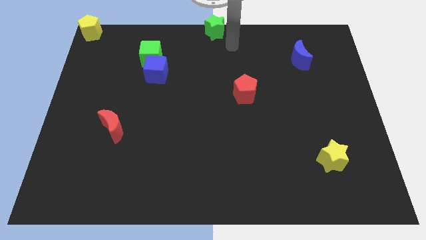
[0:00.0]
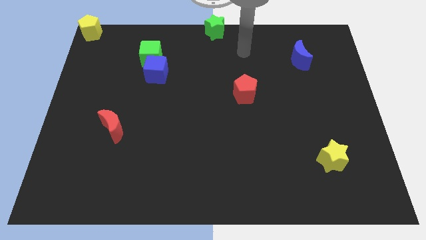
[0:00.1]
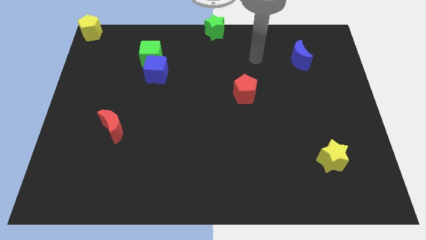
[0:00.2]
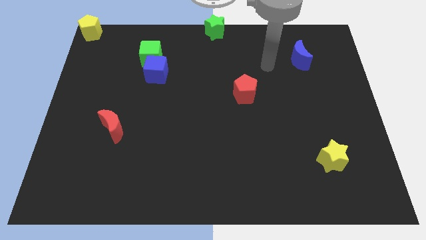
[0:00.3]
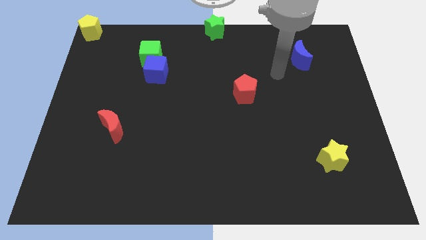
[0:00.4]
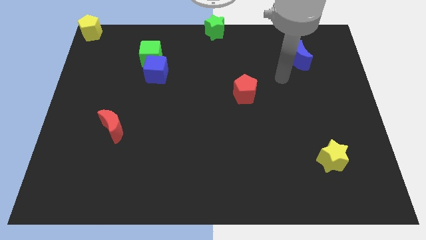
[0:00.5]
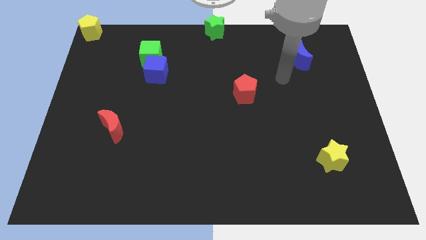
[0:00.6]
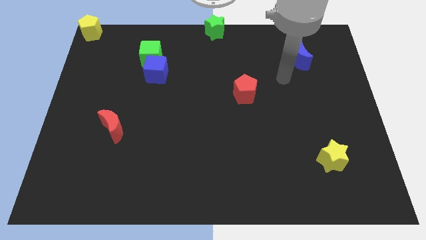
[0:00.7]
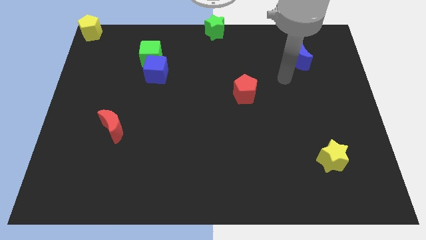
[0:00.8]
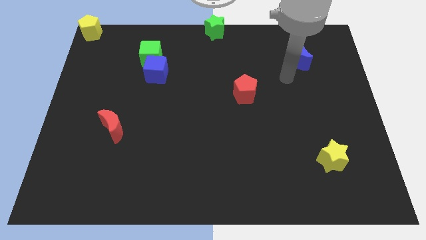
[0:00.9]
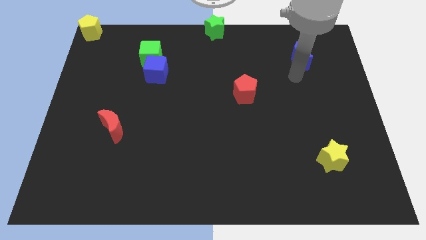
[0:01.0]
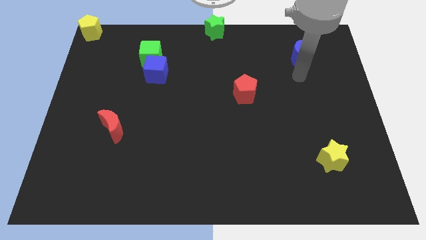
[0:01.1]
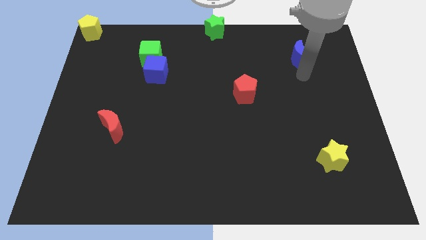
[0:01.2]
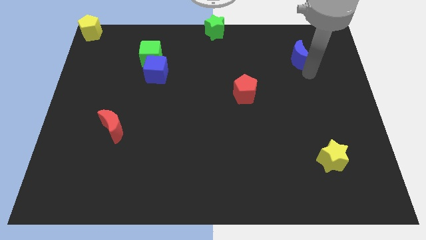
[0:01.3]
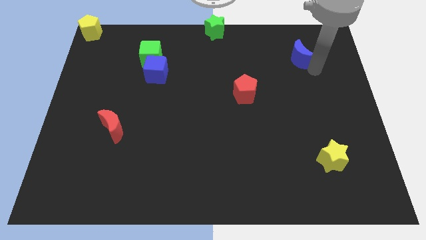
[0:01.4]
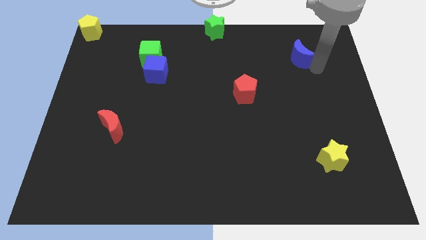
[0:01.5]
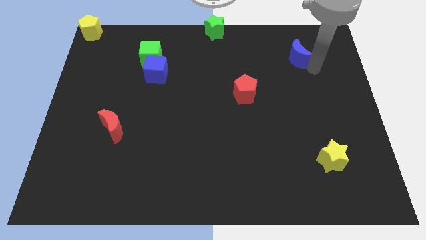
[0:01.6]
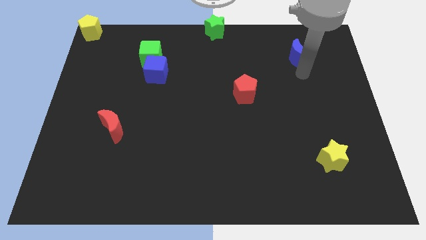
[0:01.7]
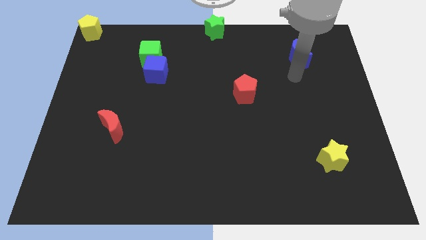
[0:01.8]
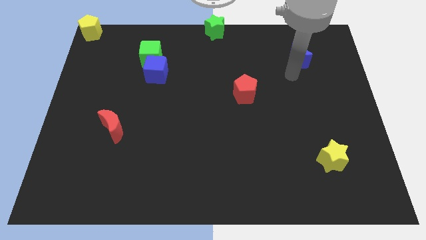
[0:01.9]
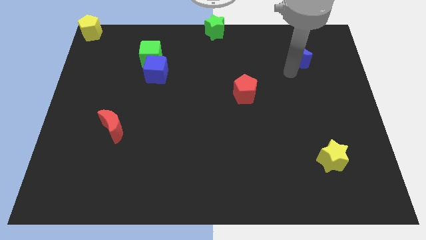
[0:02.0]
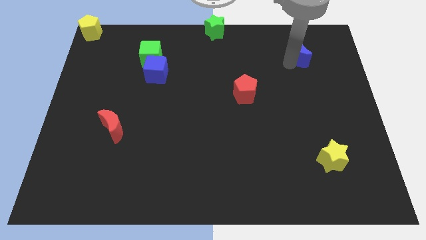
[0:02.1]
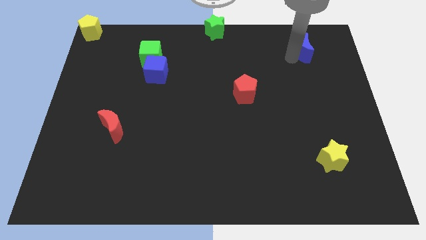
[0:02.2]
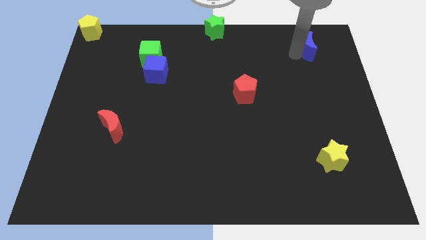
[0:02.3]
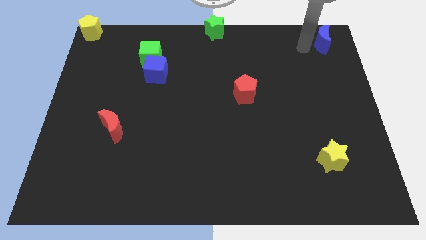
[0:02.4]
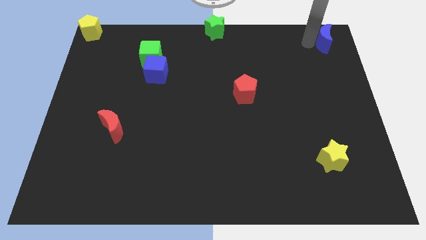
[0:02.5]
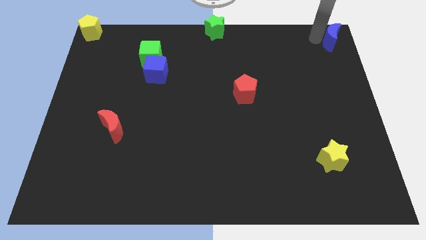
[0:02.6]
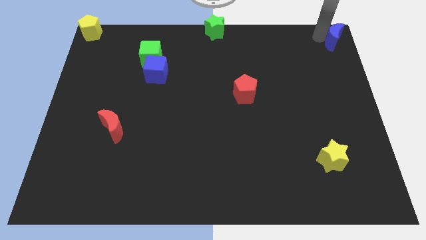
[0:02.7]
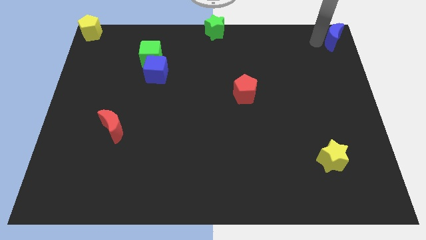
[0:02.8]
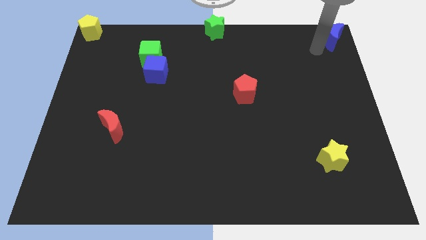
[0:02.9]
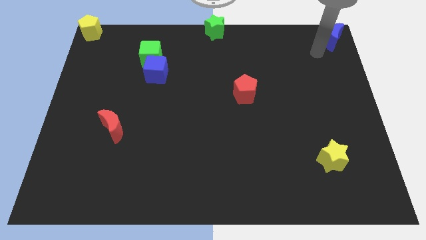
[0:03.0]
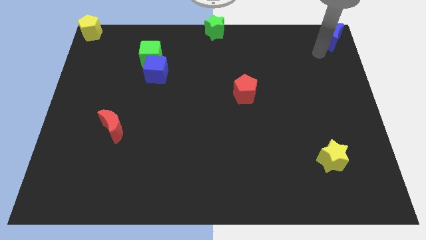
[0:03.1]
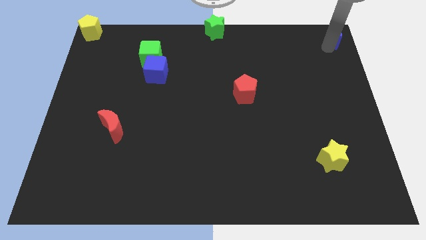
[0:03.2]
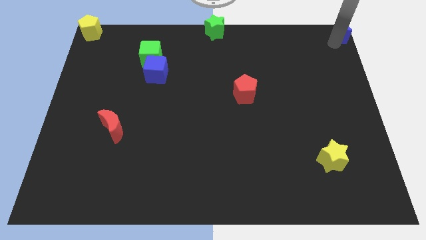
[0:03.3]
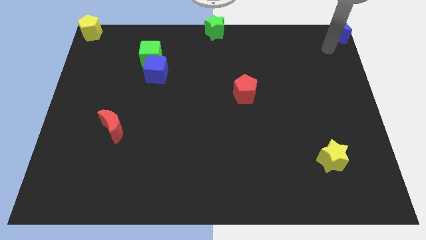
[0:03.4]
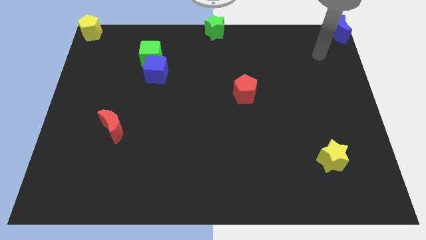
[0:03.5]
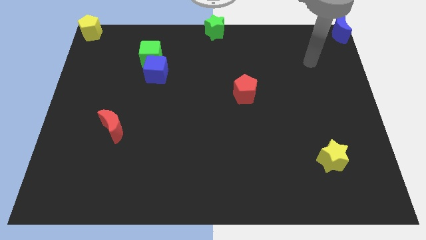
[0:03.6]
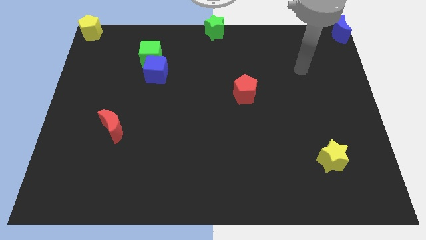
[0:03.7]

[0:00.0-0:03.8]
push the blue moon to the top right corner

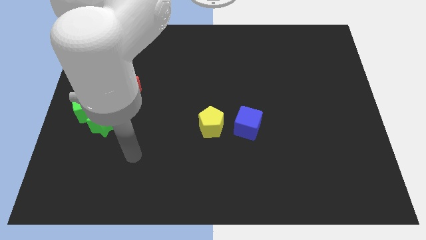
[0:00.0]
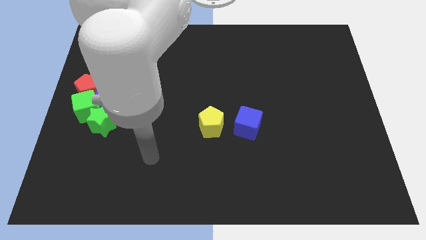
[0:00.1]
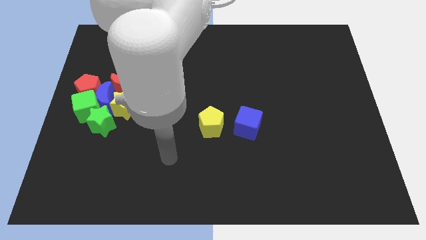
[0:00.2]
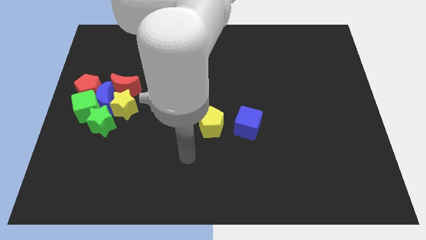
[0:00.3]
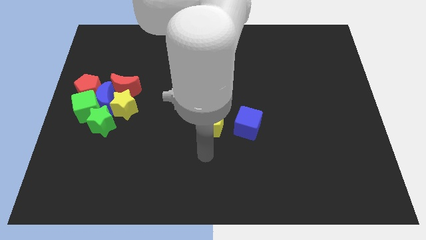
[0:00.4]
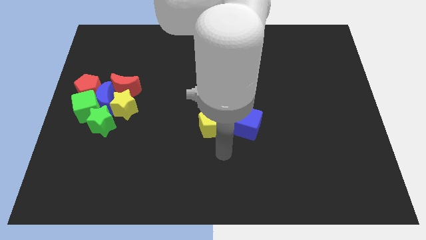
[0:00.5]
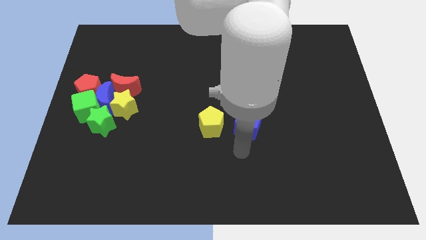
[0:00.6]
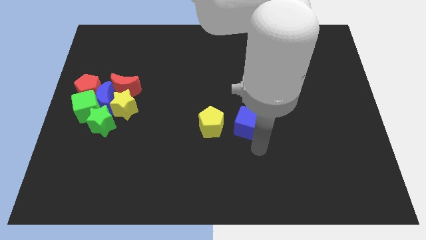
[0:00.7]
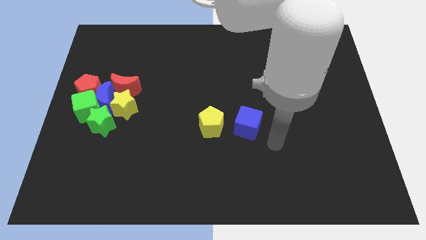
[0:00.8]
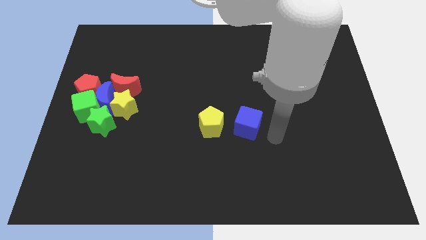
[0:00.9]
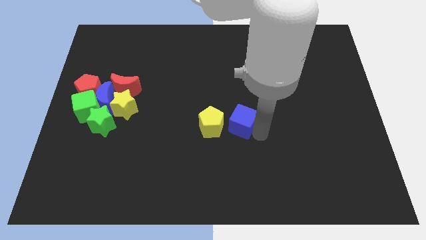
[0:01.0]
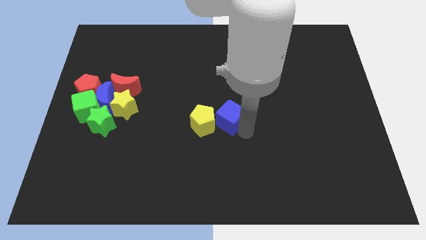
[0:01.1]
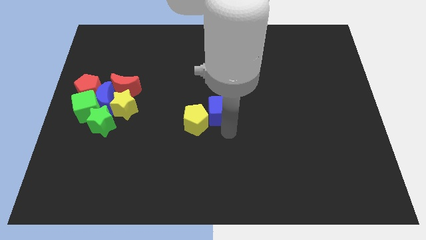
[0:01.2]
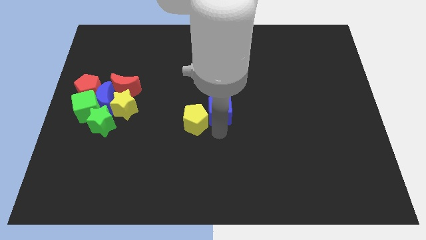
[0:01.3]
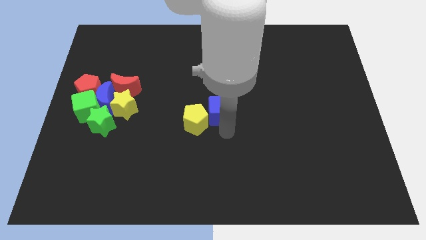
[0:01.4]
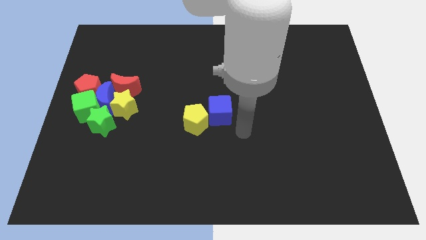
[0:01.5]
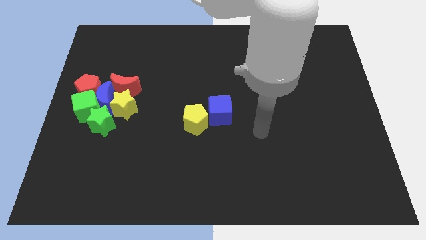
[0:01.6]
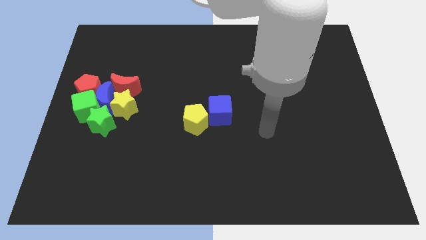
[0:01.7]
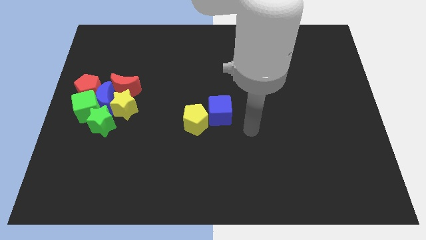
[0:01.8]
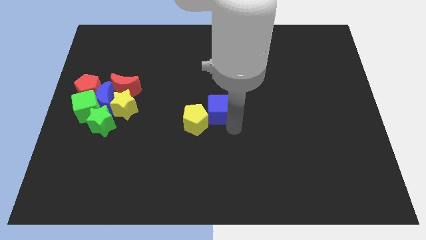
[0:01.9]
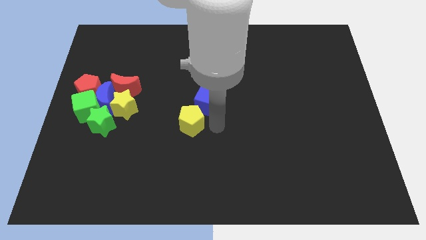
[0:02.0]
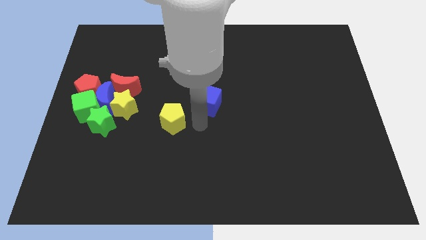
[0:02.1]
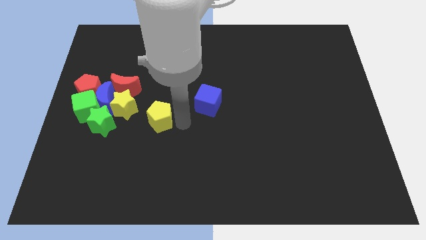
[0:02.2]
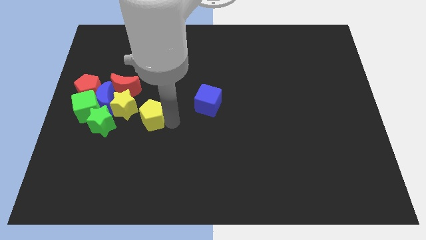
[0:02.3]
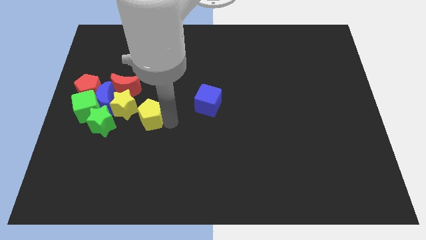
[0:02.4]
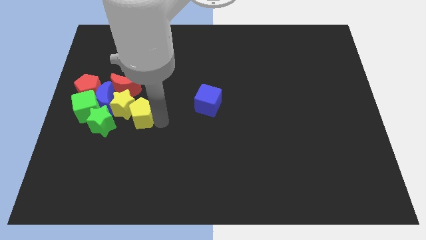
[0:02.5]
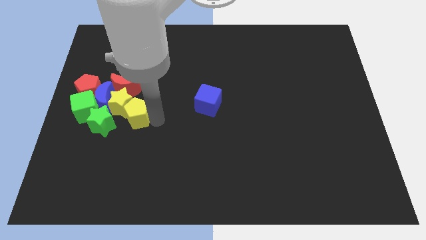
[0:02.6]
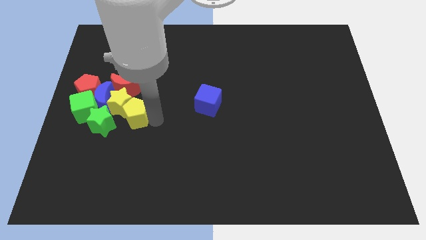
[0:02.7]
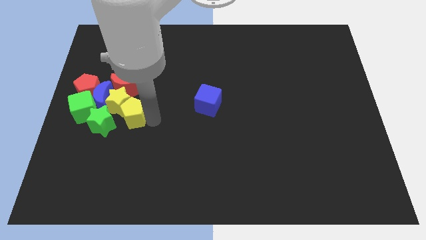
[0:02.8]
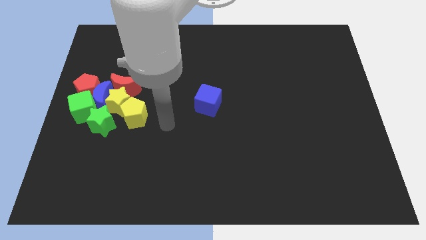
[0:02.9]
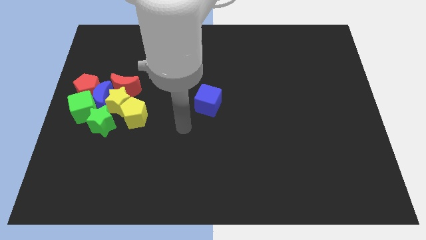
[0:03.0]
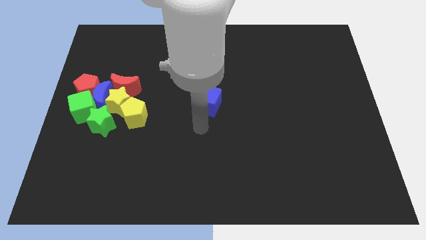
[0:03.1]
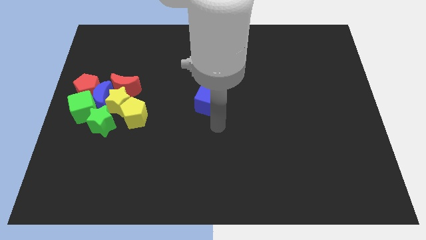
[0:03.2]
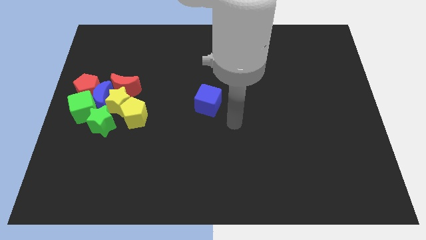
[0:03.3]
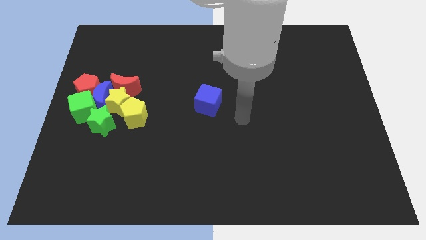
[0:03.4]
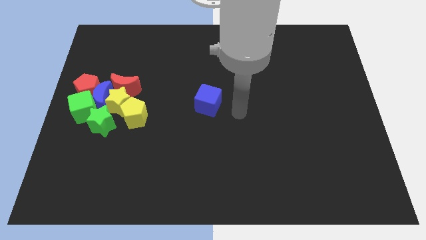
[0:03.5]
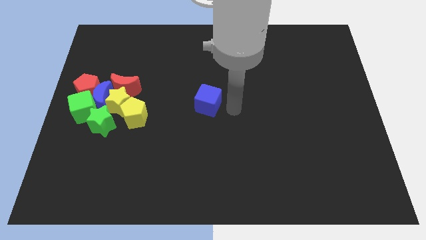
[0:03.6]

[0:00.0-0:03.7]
move the yellow pentagon into the group of blocks

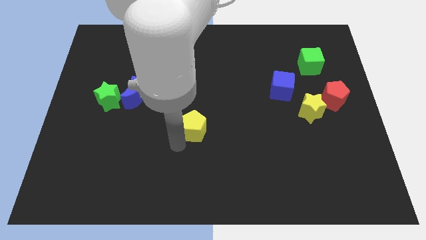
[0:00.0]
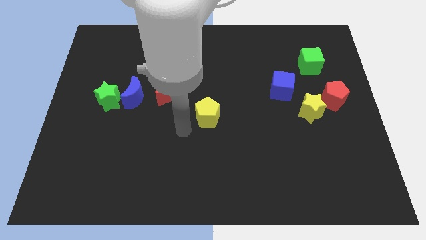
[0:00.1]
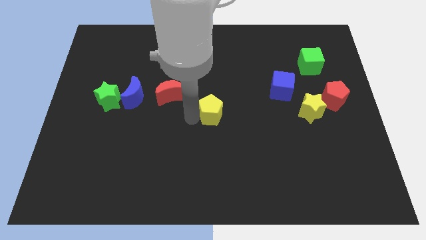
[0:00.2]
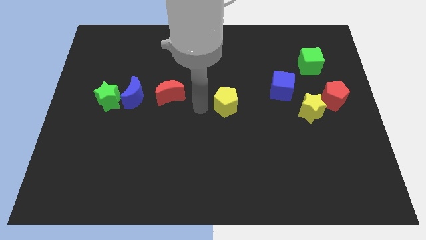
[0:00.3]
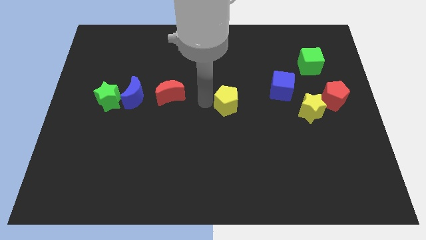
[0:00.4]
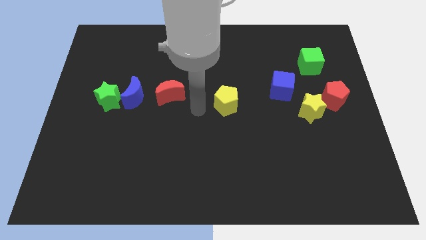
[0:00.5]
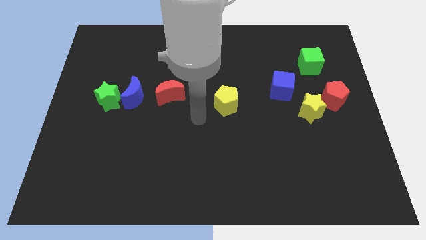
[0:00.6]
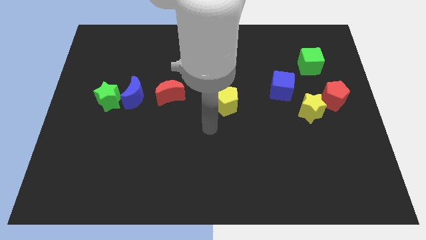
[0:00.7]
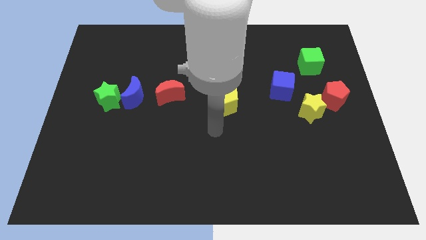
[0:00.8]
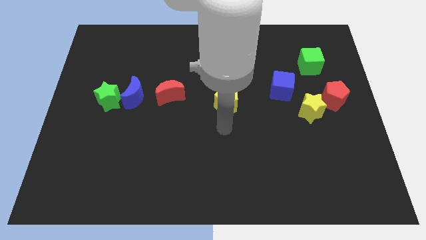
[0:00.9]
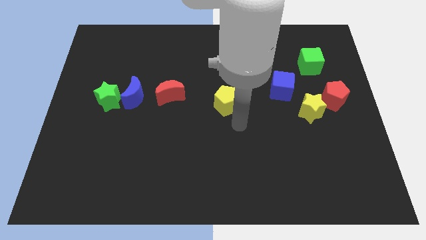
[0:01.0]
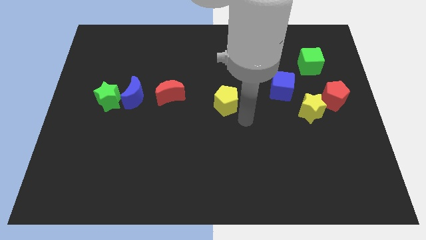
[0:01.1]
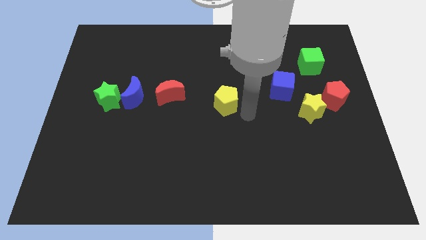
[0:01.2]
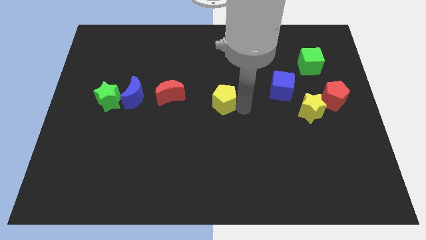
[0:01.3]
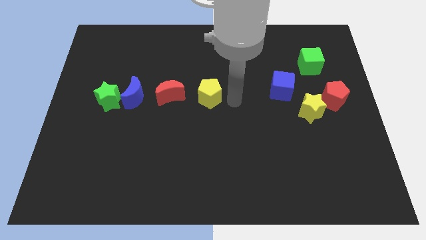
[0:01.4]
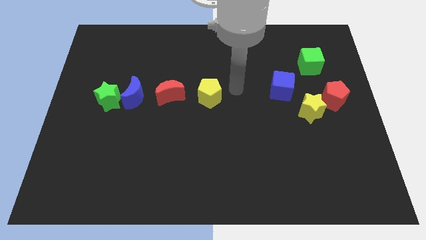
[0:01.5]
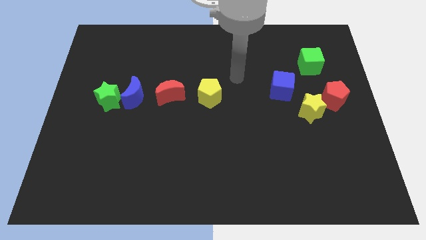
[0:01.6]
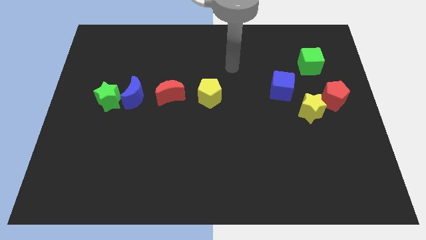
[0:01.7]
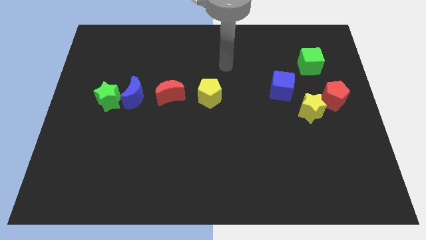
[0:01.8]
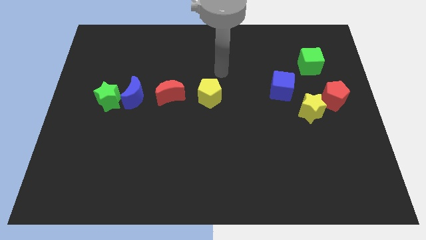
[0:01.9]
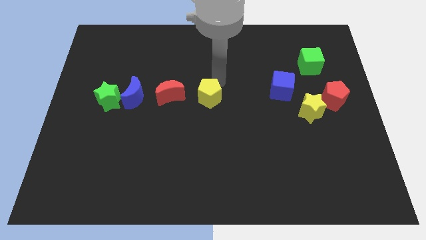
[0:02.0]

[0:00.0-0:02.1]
push yellow pentagon towards red moon
